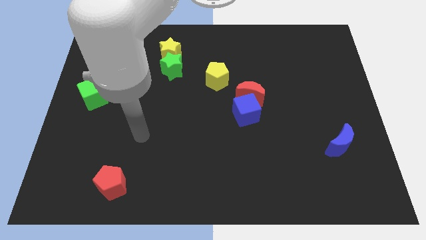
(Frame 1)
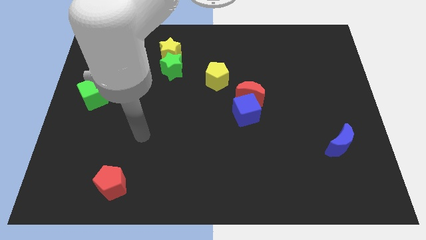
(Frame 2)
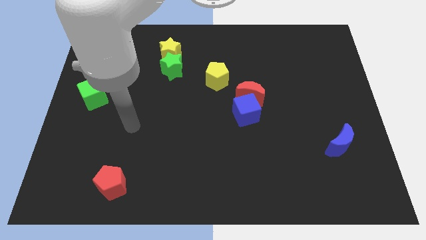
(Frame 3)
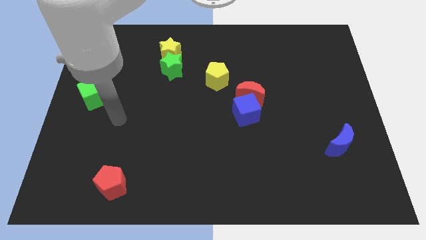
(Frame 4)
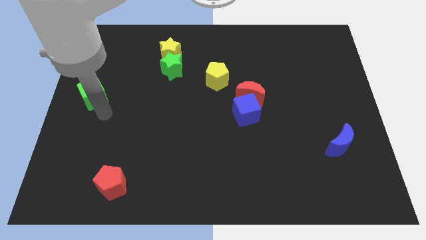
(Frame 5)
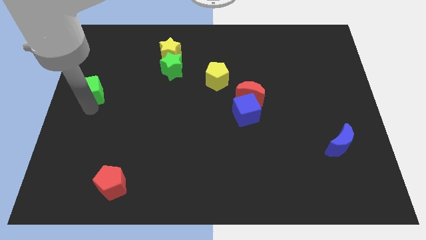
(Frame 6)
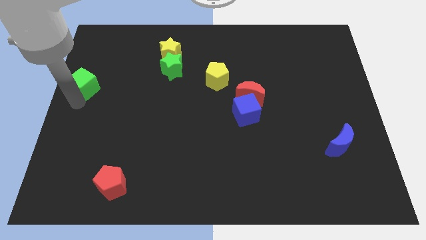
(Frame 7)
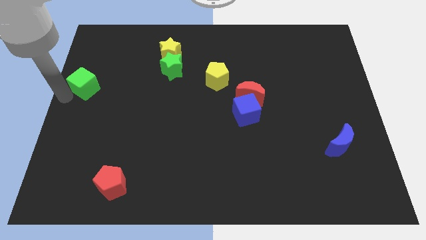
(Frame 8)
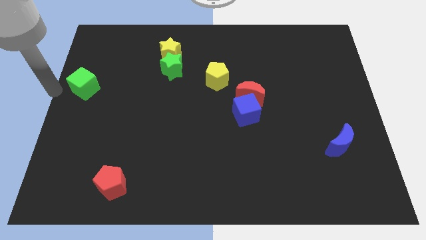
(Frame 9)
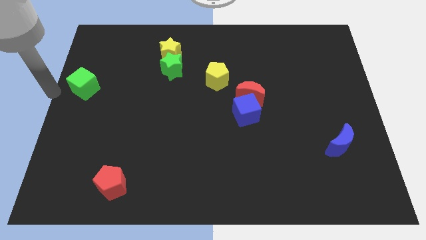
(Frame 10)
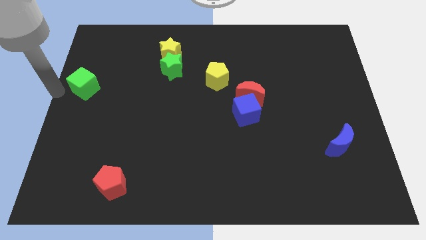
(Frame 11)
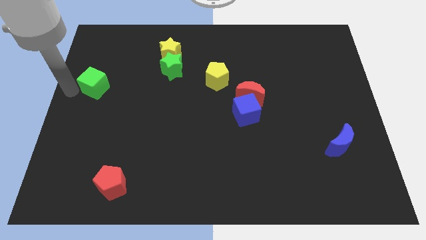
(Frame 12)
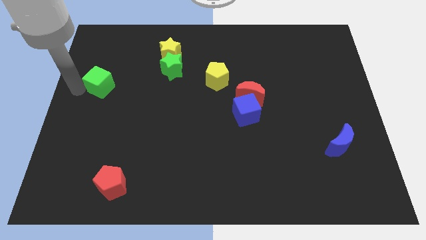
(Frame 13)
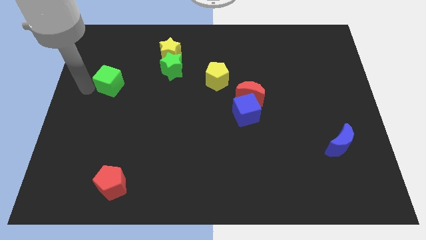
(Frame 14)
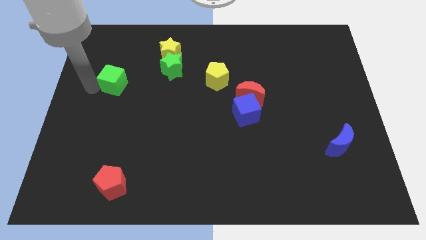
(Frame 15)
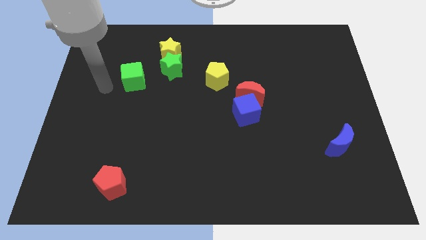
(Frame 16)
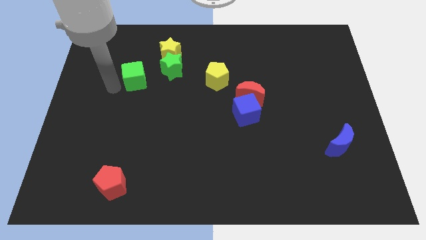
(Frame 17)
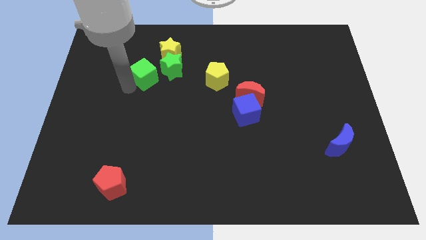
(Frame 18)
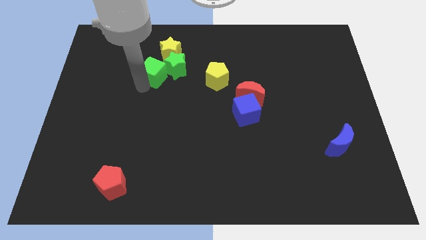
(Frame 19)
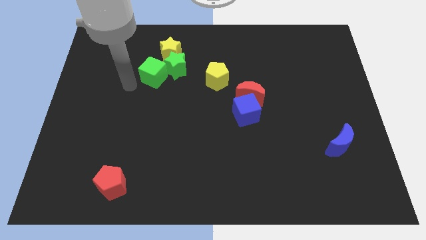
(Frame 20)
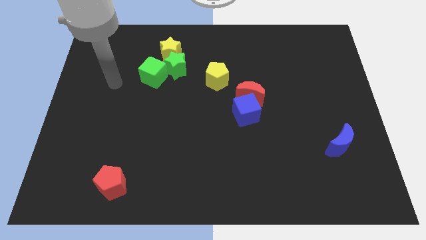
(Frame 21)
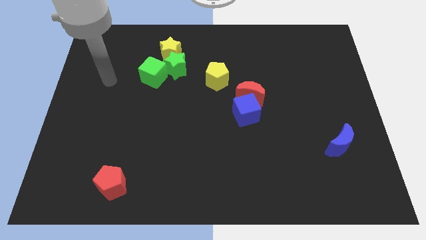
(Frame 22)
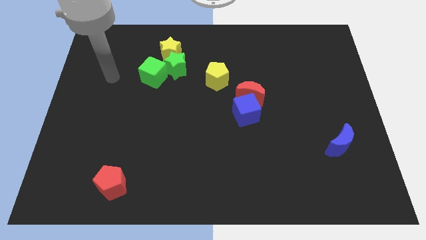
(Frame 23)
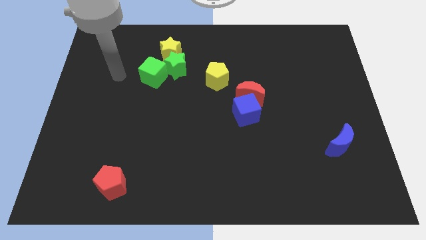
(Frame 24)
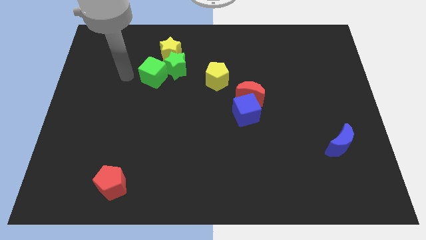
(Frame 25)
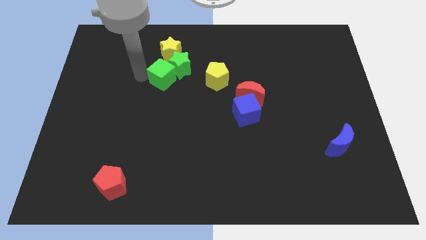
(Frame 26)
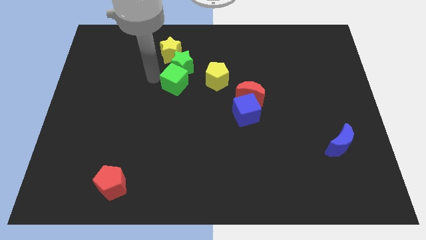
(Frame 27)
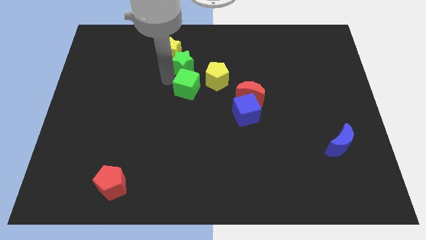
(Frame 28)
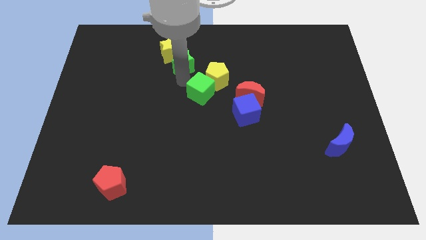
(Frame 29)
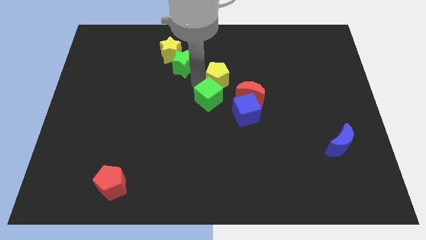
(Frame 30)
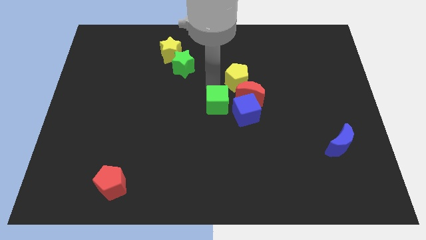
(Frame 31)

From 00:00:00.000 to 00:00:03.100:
slide the green cube diagonally bottom right to the green star

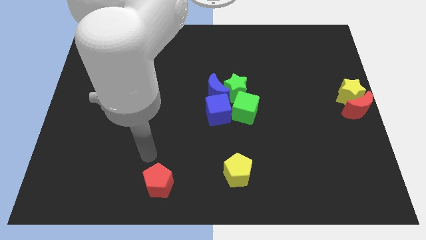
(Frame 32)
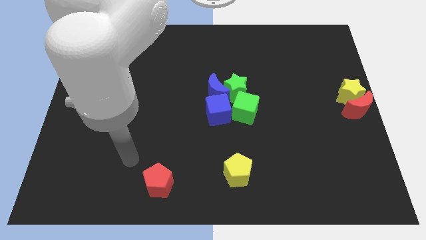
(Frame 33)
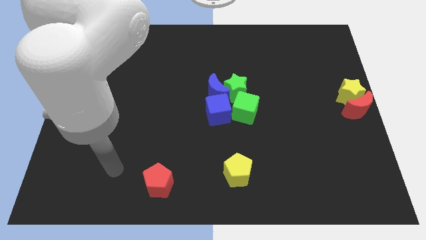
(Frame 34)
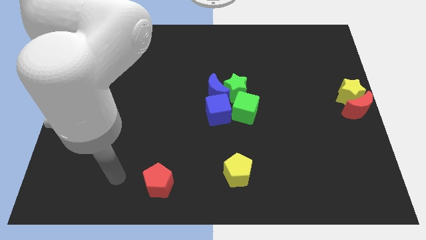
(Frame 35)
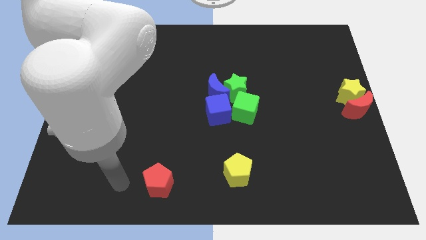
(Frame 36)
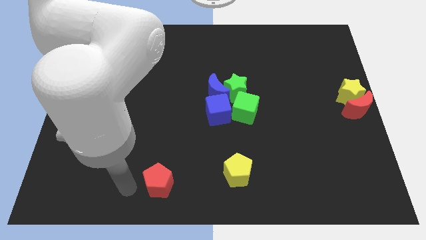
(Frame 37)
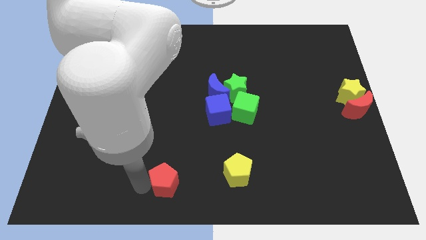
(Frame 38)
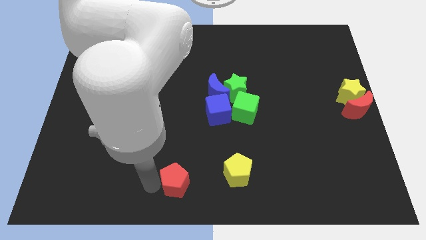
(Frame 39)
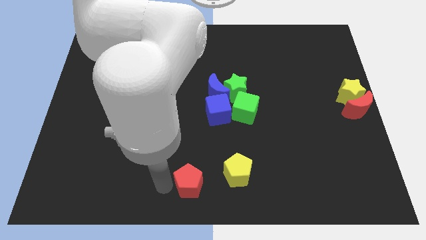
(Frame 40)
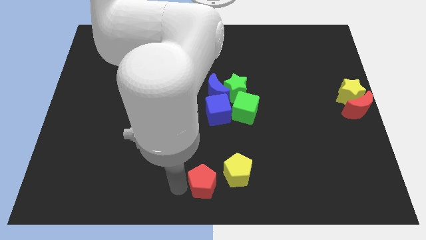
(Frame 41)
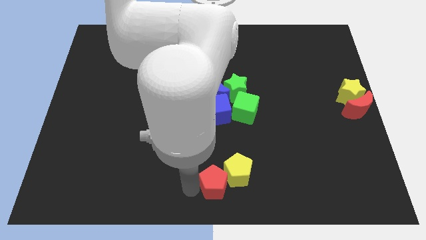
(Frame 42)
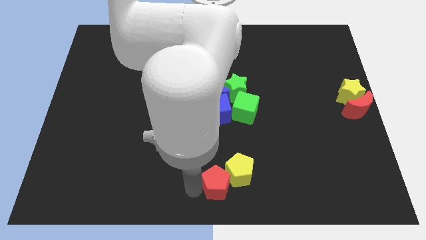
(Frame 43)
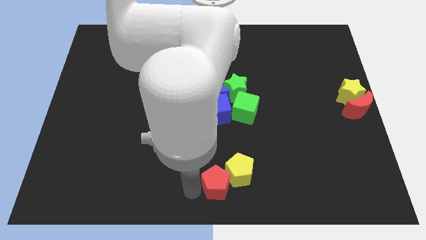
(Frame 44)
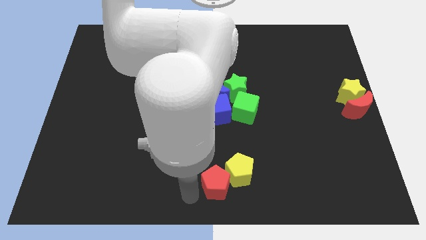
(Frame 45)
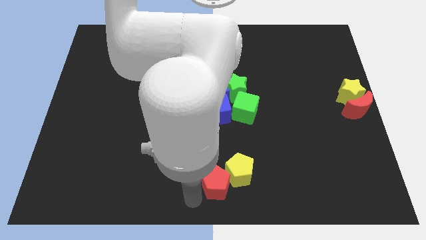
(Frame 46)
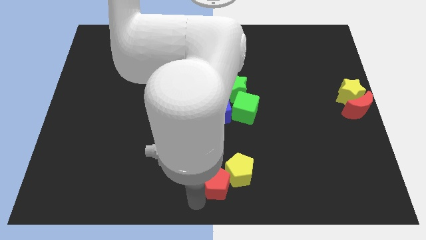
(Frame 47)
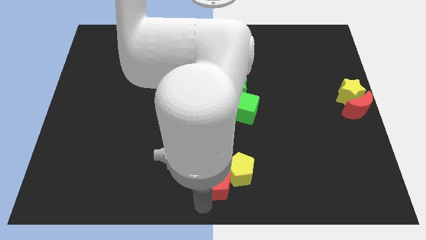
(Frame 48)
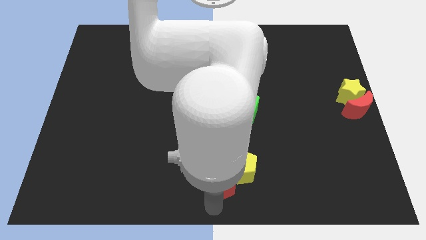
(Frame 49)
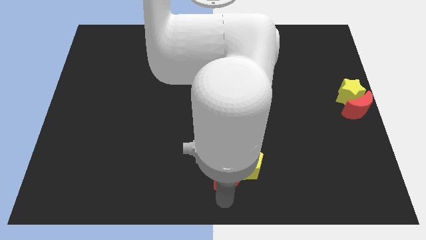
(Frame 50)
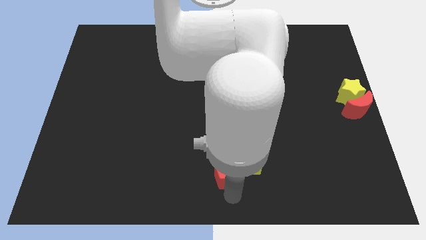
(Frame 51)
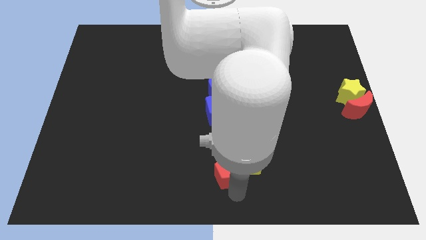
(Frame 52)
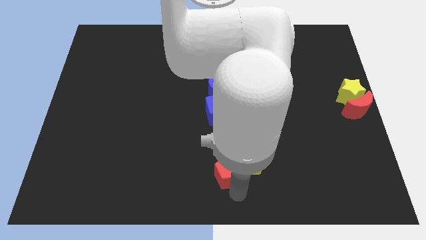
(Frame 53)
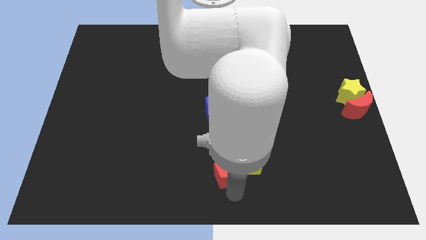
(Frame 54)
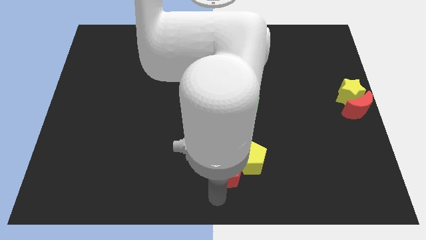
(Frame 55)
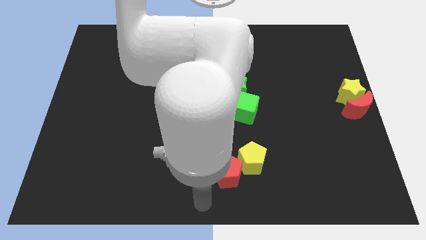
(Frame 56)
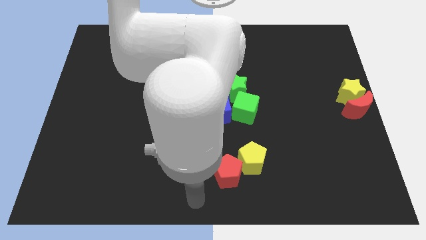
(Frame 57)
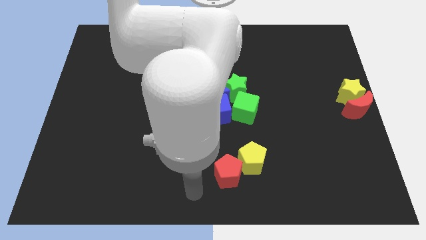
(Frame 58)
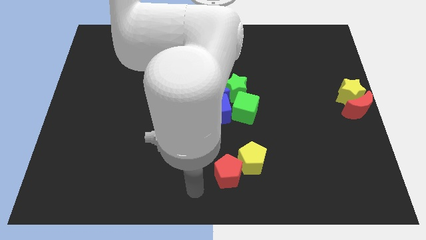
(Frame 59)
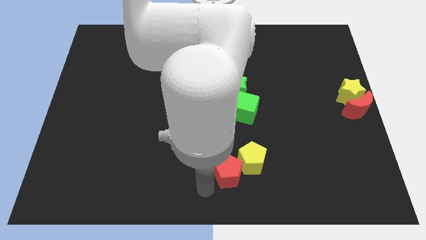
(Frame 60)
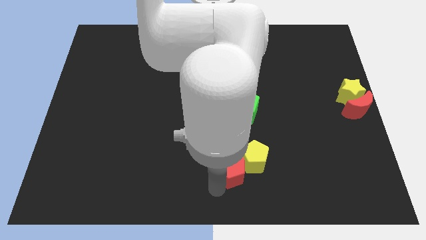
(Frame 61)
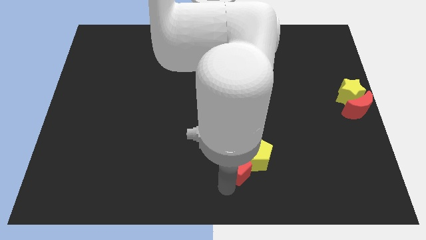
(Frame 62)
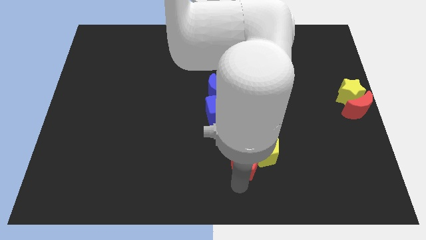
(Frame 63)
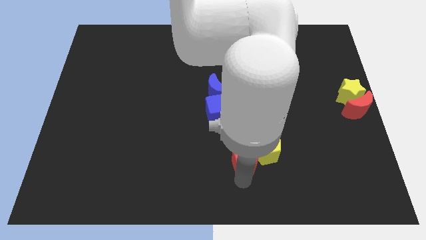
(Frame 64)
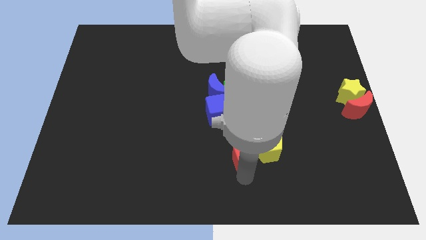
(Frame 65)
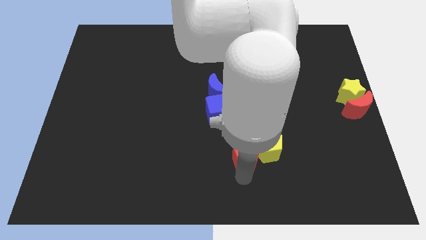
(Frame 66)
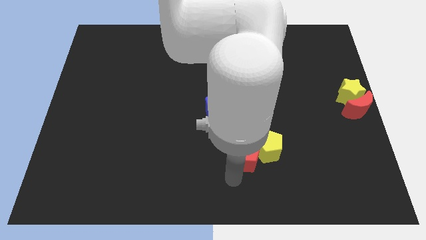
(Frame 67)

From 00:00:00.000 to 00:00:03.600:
push the red and yellow pentagon to the bottom center

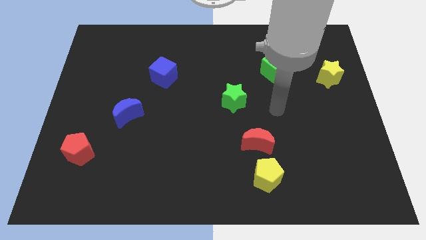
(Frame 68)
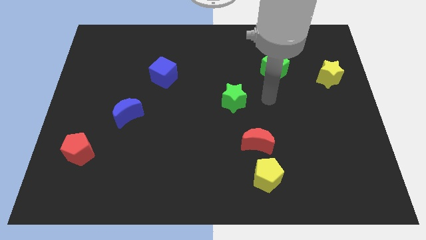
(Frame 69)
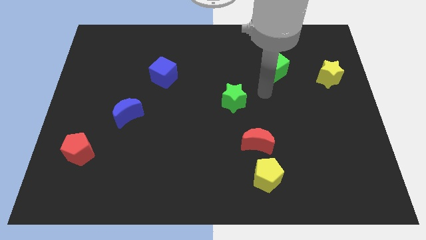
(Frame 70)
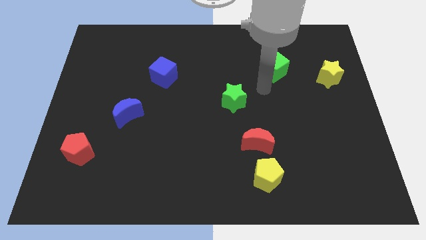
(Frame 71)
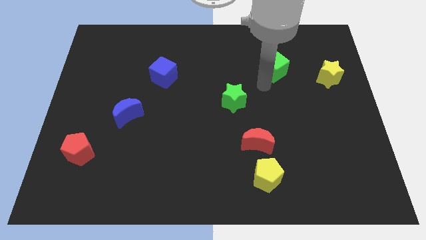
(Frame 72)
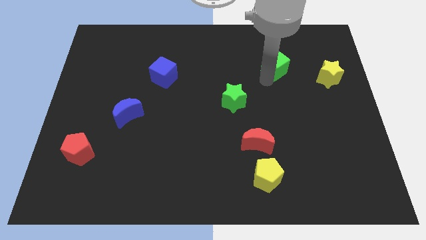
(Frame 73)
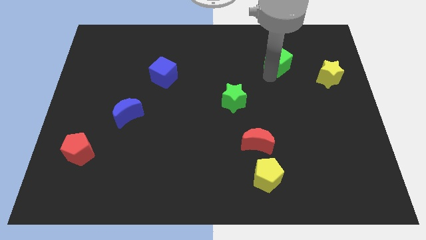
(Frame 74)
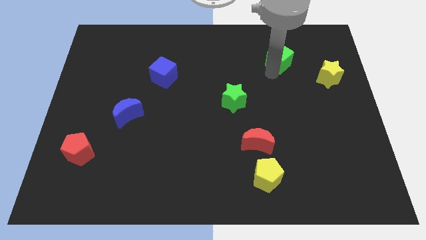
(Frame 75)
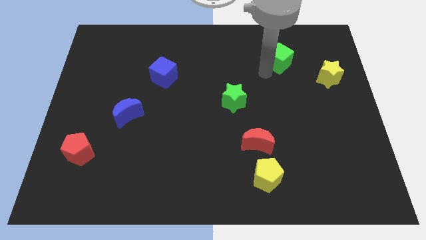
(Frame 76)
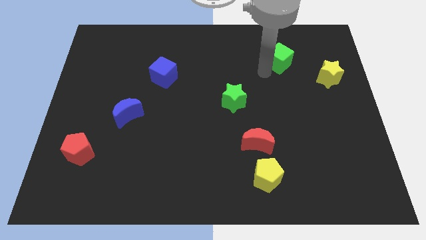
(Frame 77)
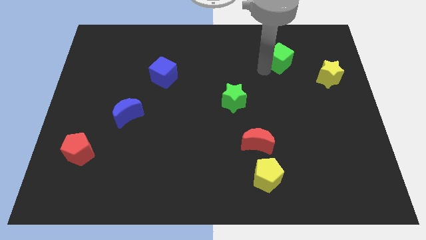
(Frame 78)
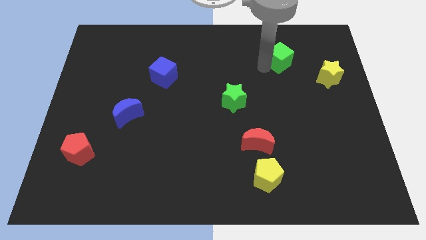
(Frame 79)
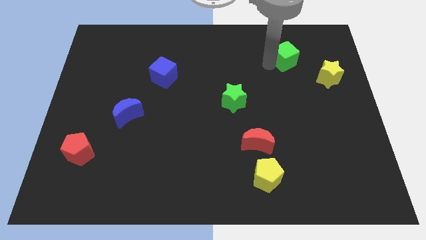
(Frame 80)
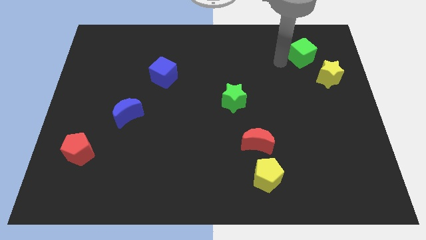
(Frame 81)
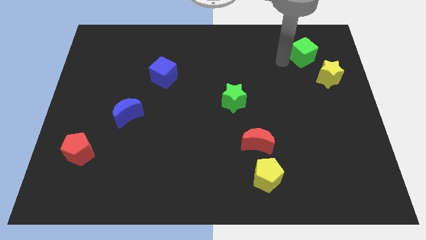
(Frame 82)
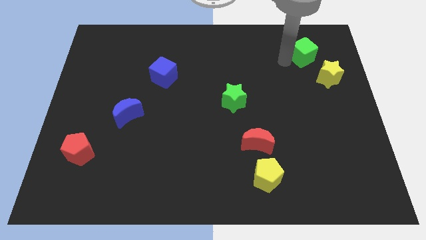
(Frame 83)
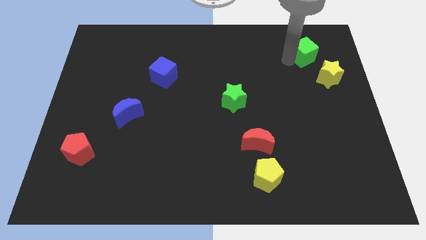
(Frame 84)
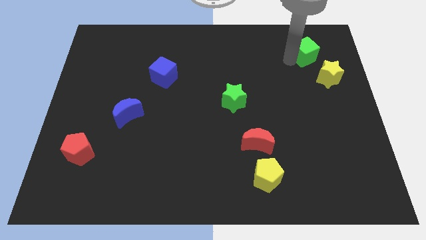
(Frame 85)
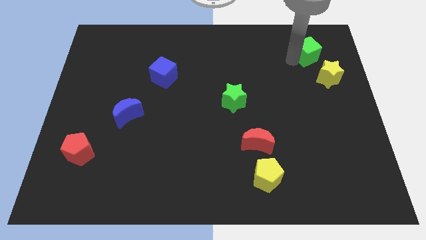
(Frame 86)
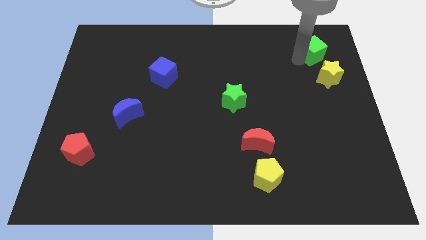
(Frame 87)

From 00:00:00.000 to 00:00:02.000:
push the green cube towards the top right of the board

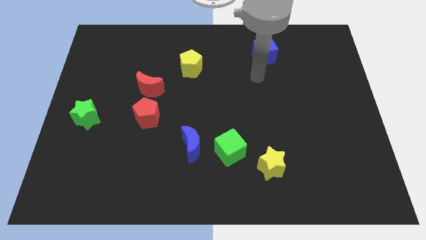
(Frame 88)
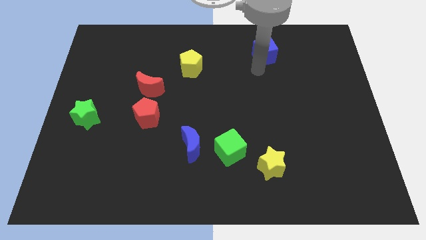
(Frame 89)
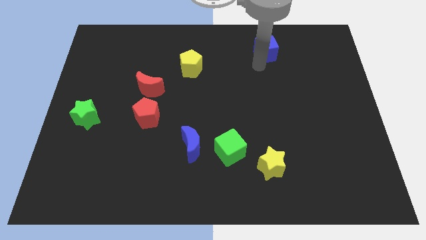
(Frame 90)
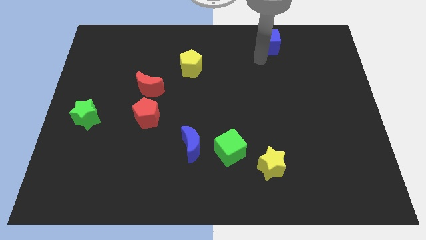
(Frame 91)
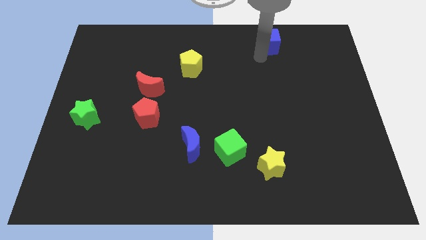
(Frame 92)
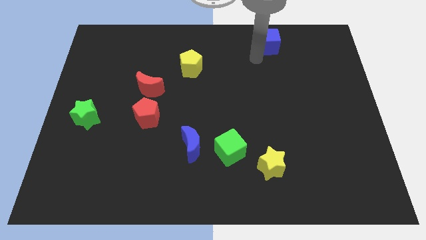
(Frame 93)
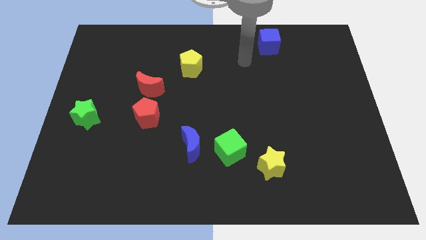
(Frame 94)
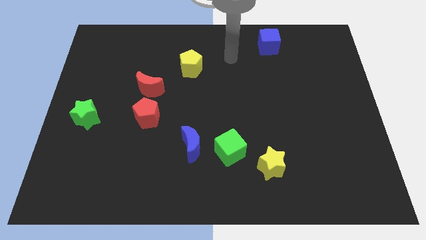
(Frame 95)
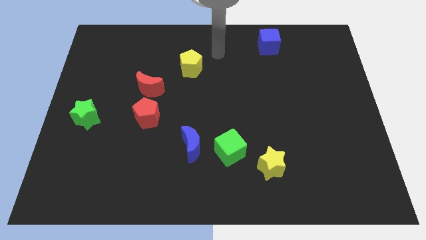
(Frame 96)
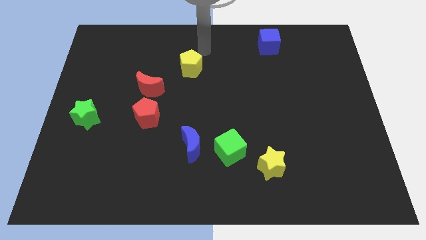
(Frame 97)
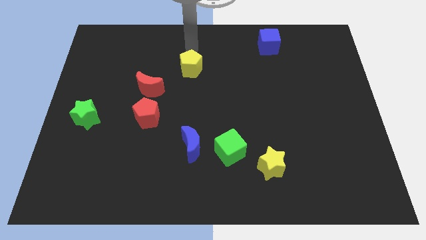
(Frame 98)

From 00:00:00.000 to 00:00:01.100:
push the blue cube towards the top side of the board
